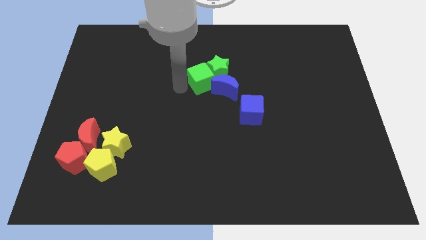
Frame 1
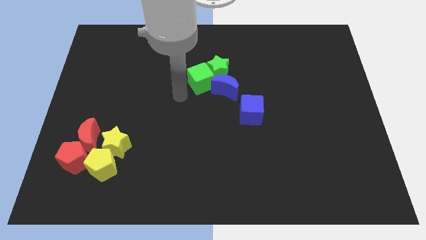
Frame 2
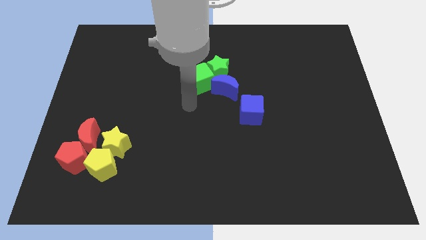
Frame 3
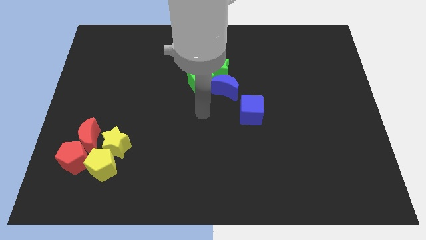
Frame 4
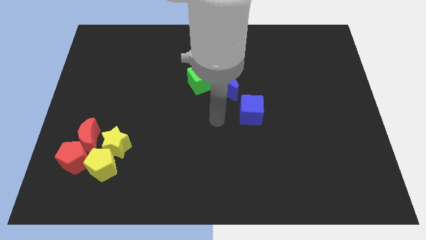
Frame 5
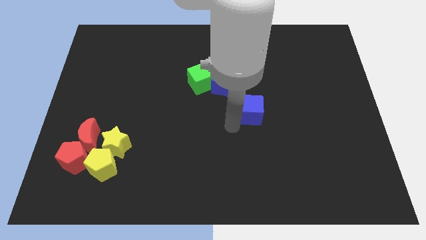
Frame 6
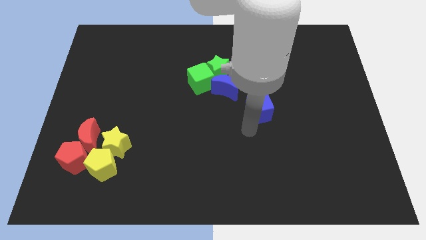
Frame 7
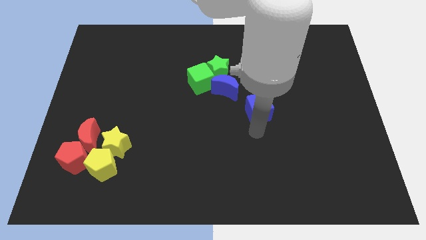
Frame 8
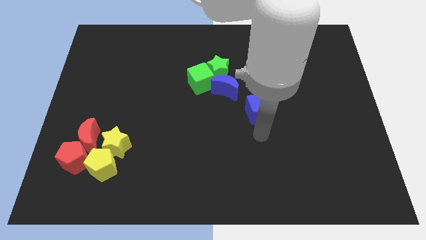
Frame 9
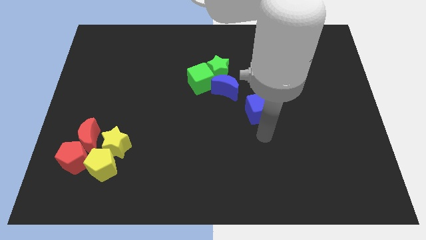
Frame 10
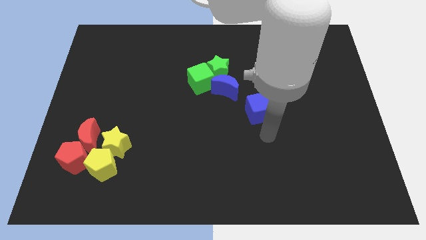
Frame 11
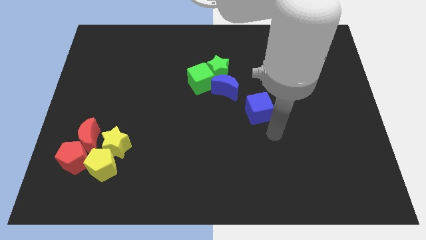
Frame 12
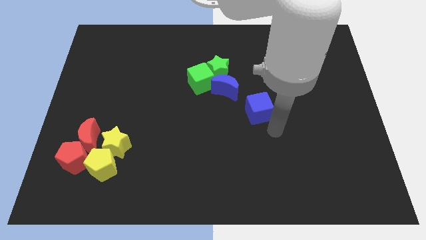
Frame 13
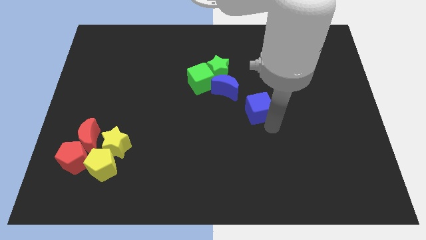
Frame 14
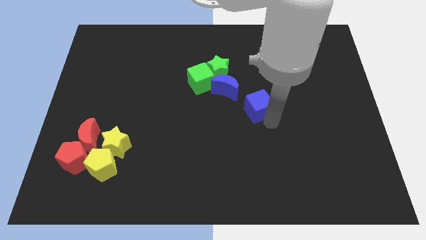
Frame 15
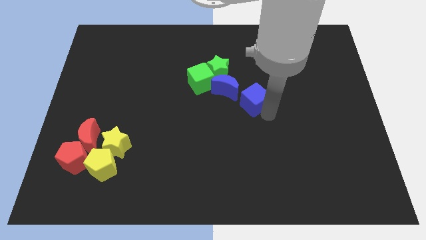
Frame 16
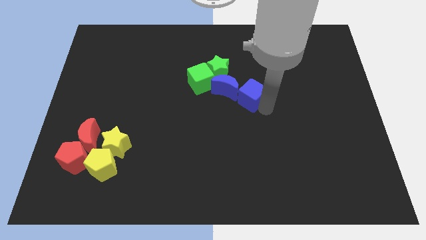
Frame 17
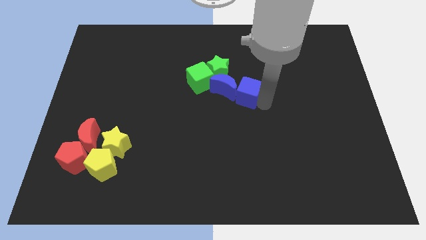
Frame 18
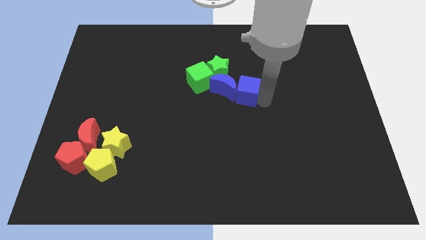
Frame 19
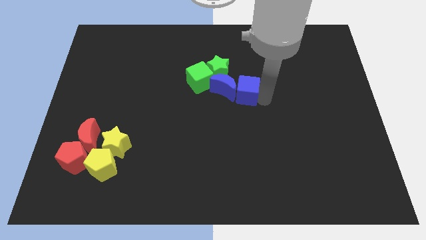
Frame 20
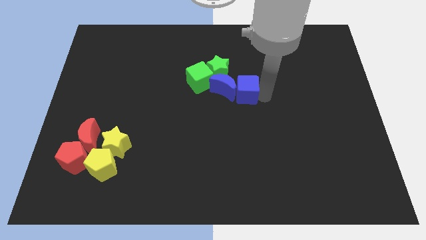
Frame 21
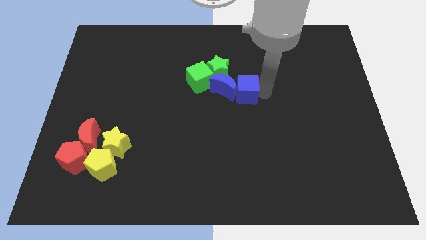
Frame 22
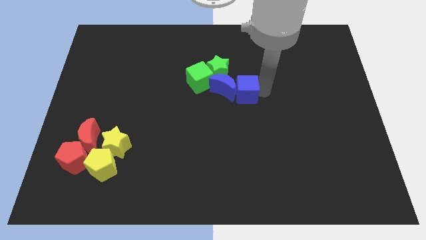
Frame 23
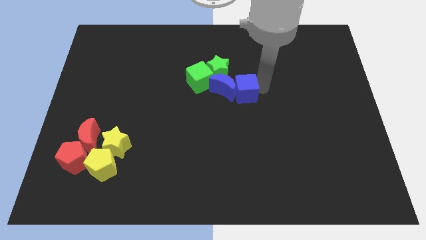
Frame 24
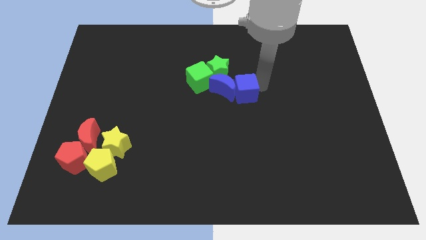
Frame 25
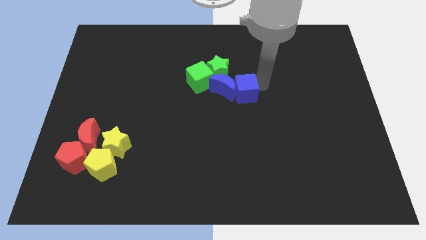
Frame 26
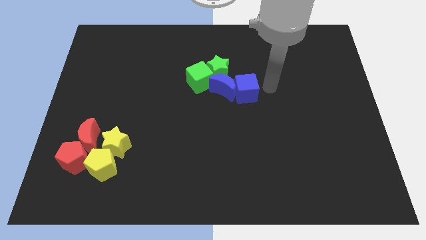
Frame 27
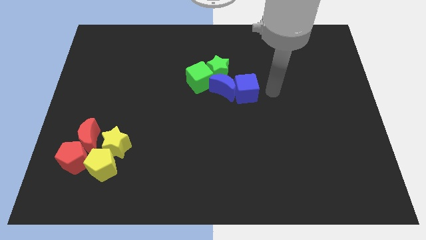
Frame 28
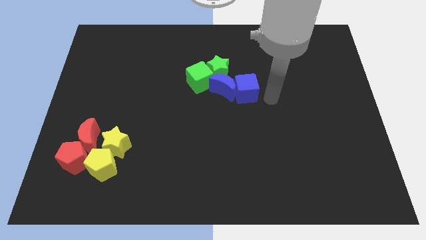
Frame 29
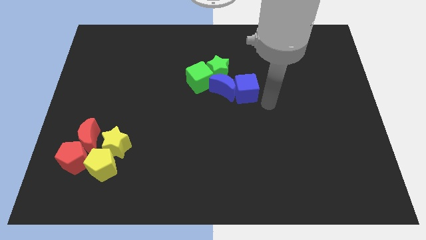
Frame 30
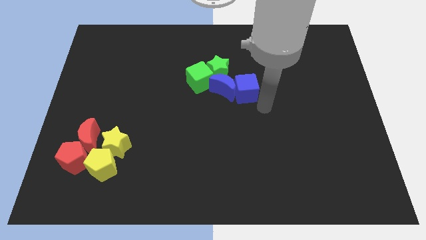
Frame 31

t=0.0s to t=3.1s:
slide blue cube into blue moon

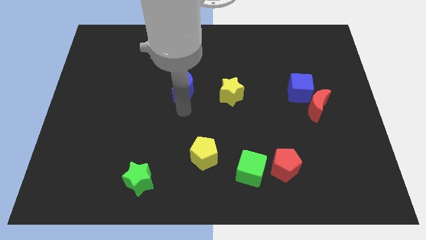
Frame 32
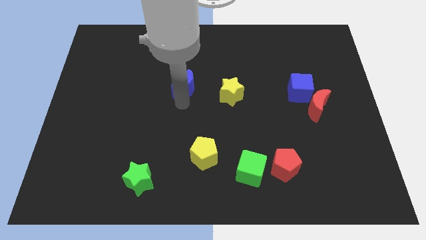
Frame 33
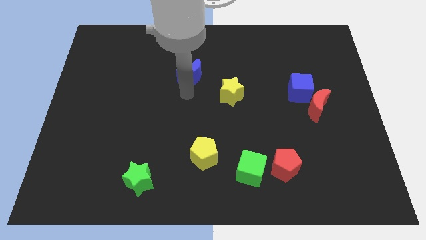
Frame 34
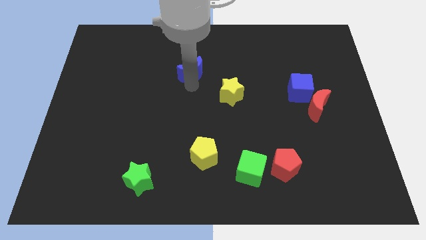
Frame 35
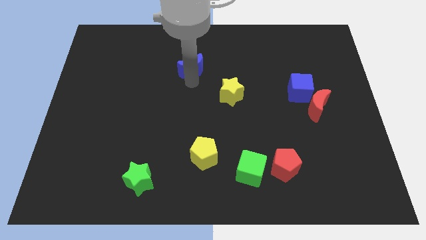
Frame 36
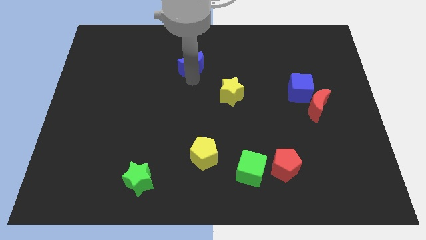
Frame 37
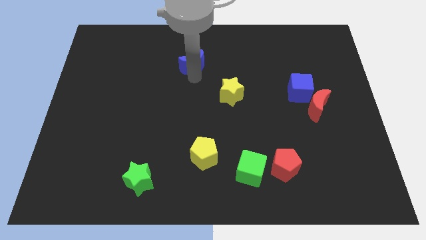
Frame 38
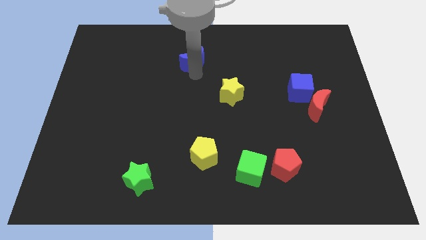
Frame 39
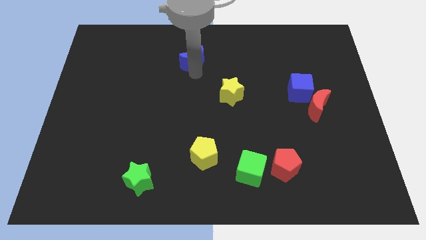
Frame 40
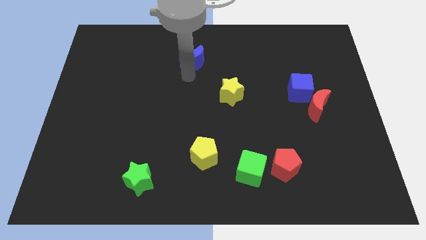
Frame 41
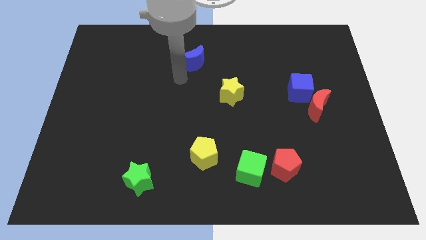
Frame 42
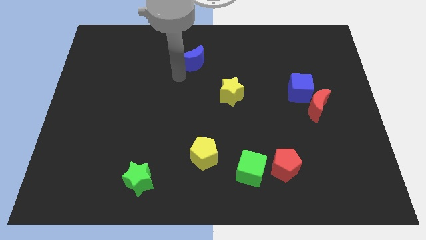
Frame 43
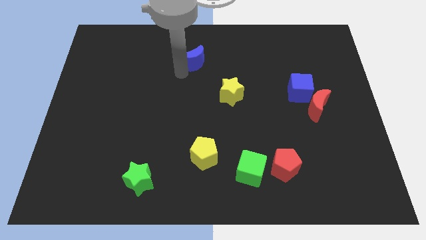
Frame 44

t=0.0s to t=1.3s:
push the blue moon to the top side of the board

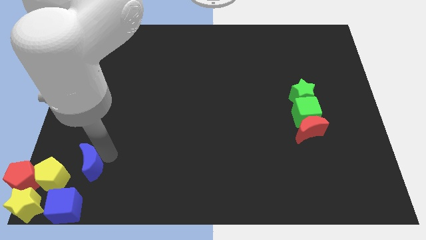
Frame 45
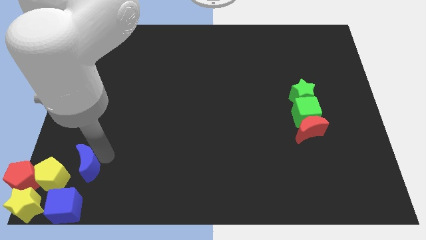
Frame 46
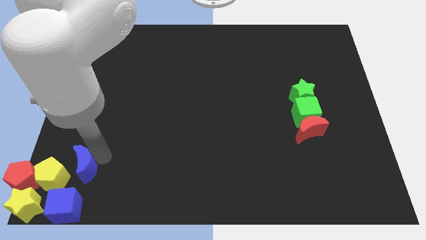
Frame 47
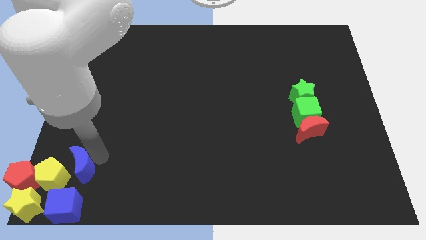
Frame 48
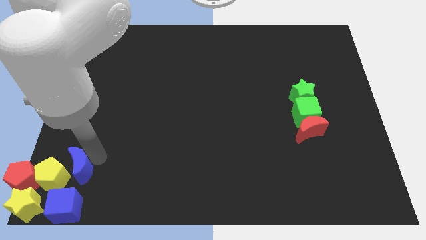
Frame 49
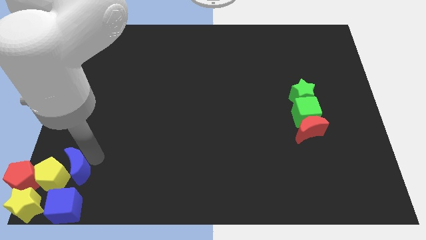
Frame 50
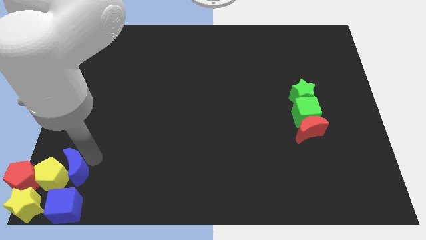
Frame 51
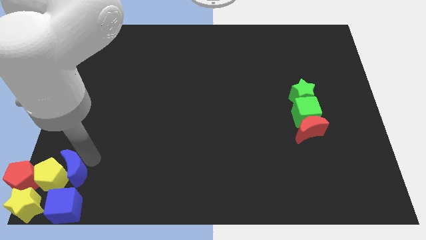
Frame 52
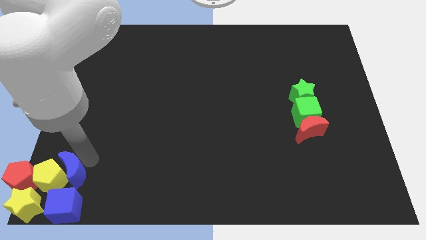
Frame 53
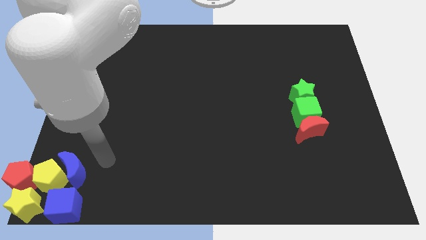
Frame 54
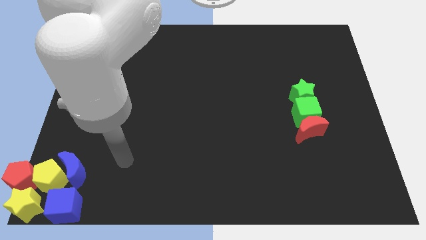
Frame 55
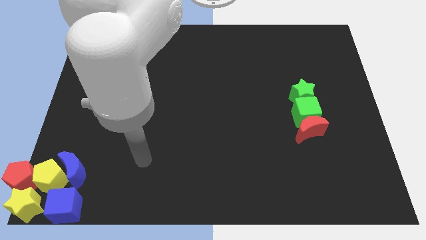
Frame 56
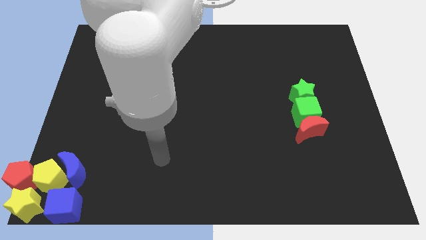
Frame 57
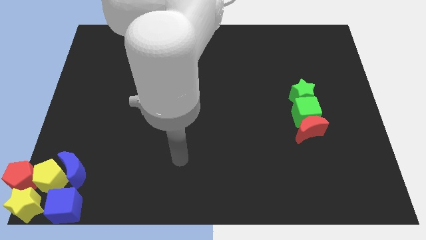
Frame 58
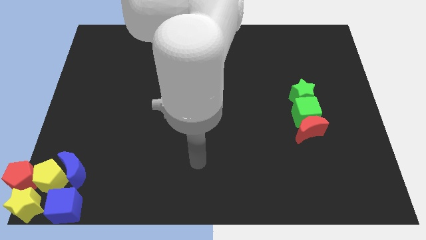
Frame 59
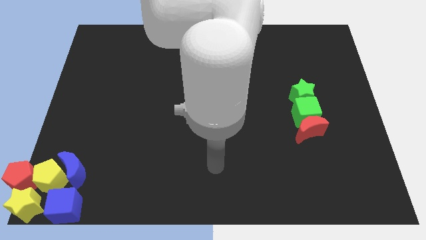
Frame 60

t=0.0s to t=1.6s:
place the blue moon to the group of blocks

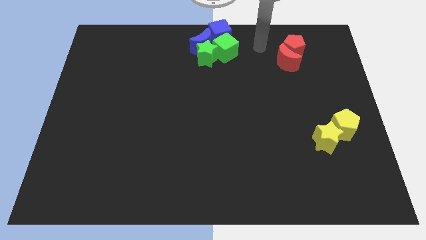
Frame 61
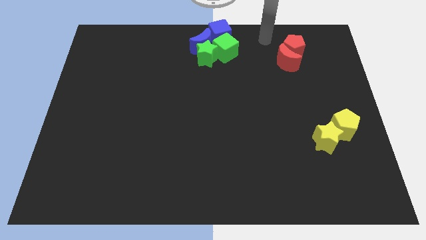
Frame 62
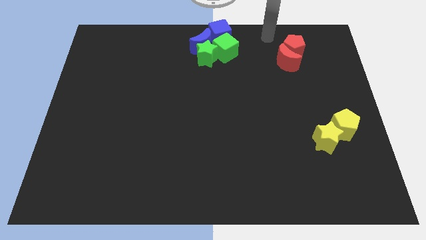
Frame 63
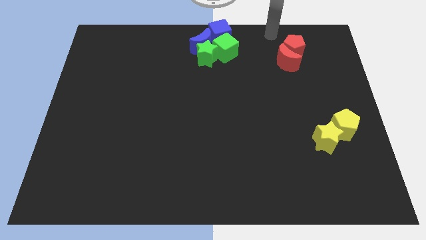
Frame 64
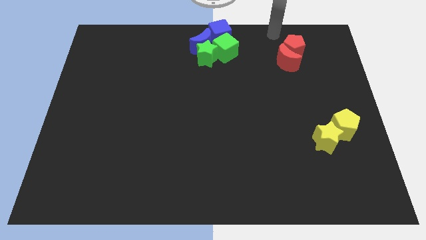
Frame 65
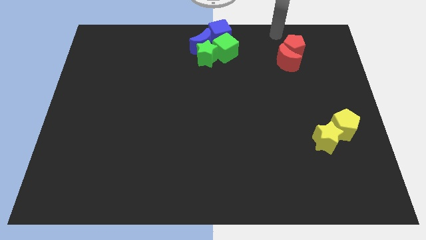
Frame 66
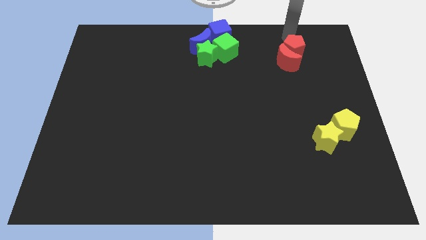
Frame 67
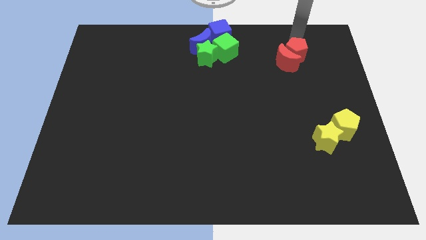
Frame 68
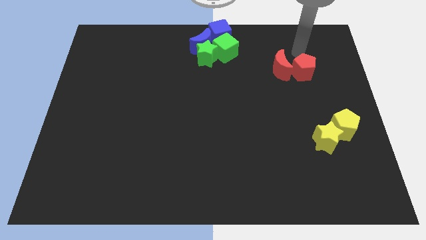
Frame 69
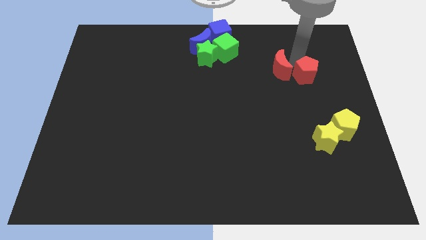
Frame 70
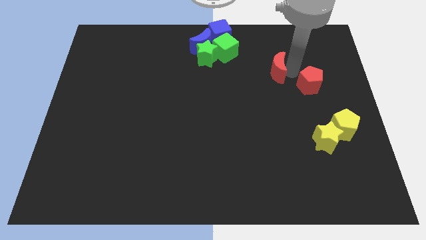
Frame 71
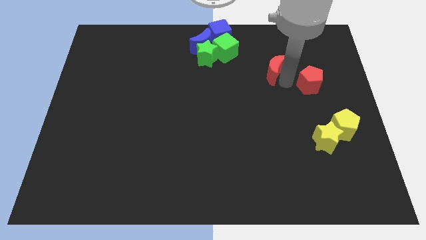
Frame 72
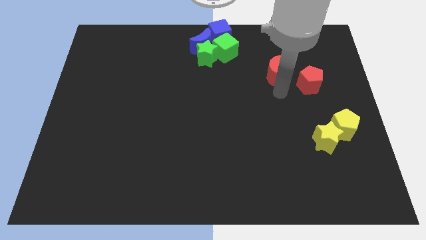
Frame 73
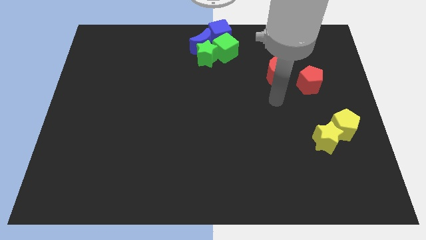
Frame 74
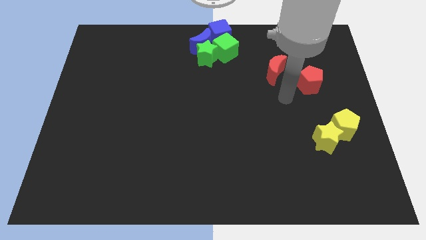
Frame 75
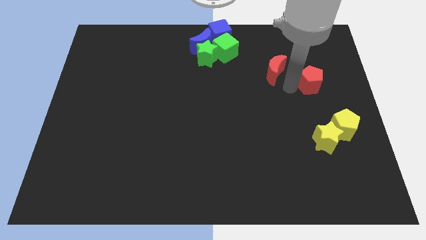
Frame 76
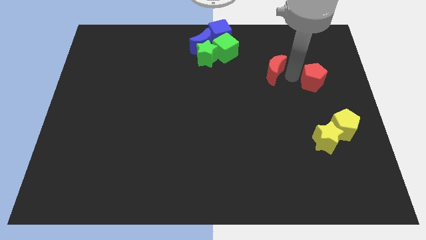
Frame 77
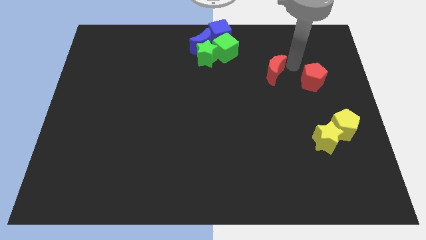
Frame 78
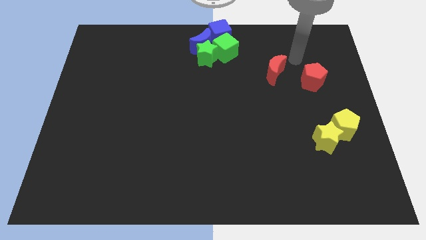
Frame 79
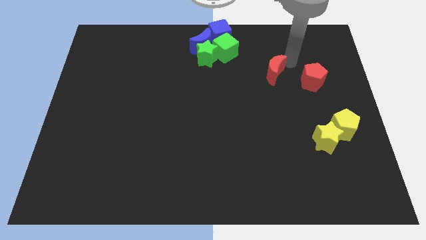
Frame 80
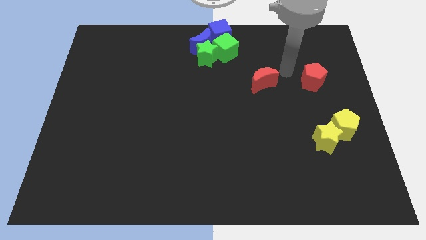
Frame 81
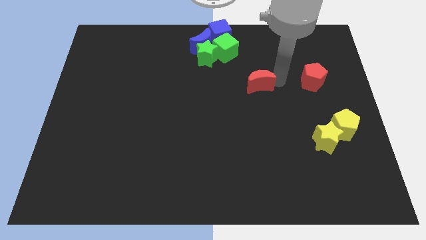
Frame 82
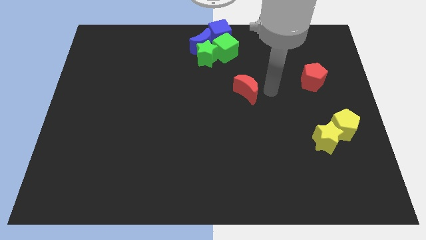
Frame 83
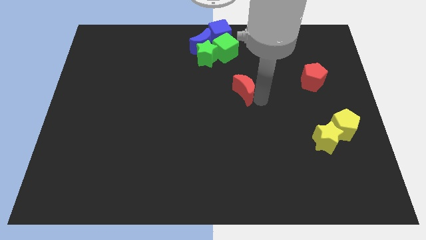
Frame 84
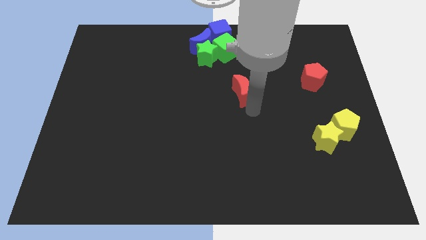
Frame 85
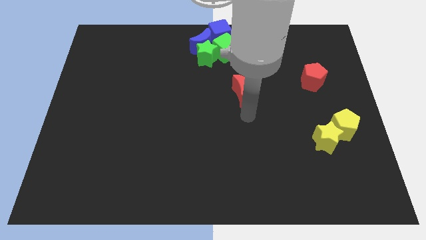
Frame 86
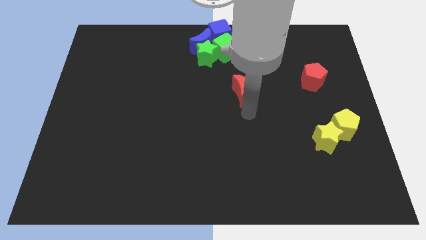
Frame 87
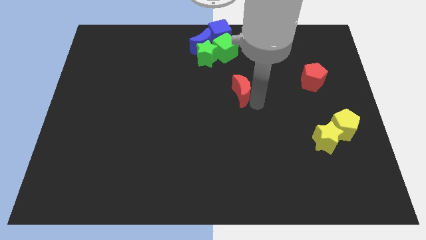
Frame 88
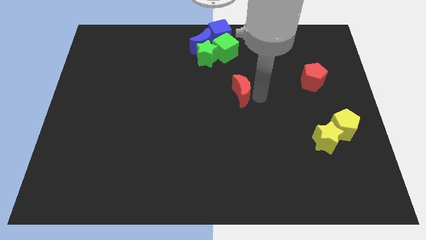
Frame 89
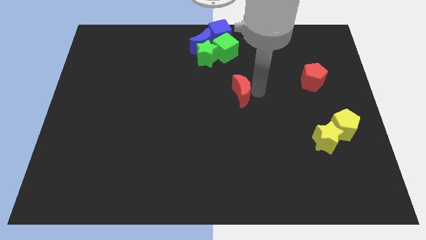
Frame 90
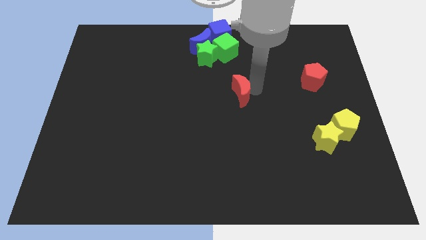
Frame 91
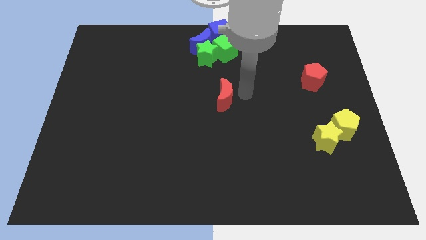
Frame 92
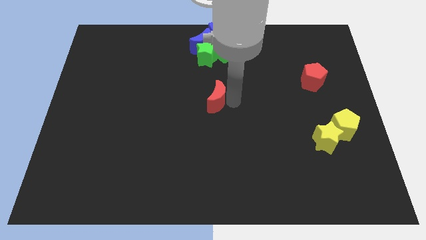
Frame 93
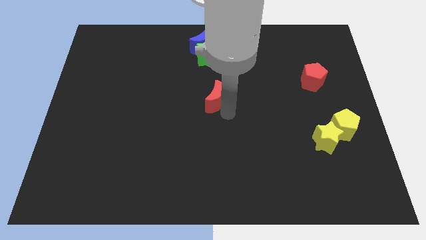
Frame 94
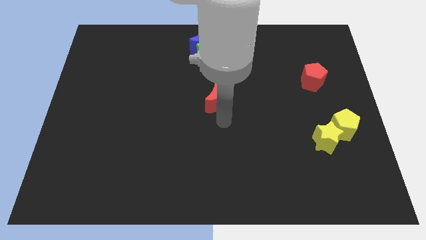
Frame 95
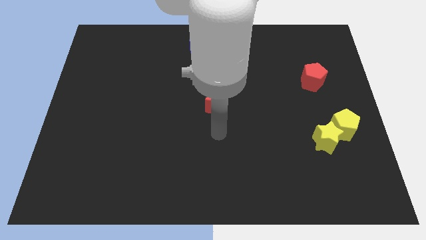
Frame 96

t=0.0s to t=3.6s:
separate the red crescent from the red pentagon
